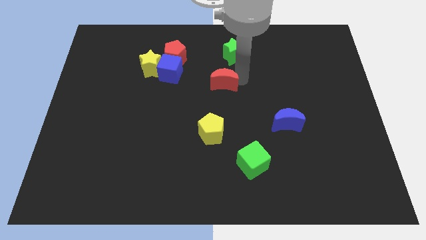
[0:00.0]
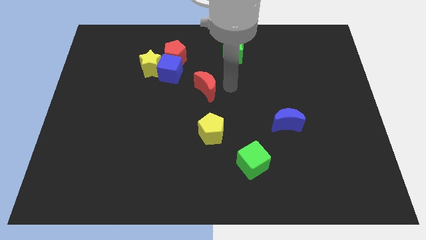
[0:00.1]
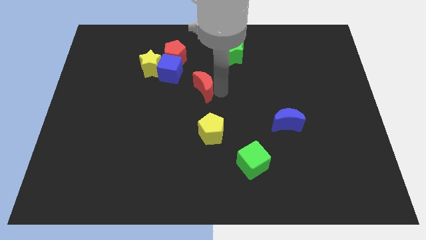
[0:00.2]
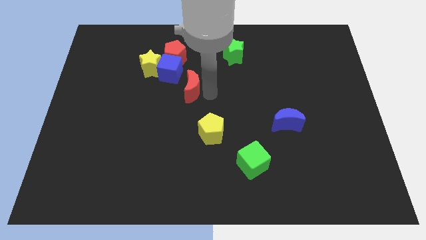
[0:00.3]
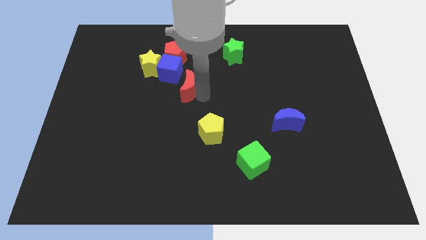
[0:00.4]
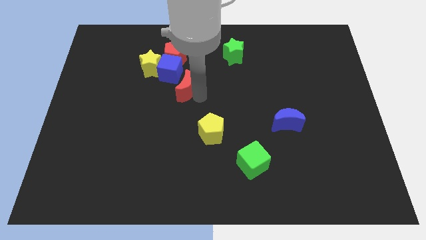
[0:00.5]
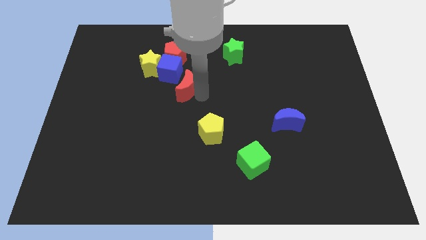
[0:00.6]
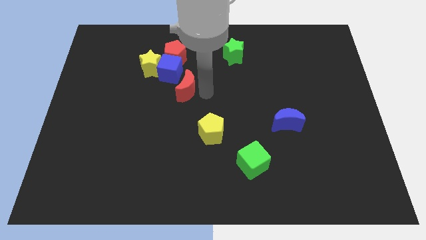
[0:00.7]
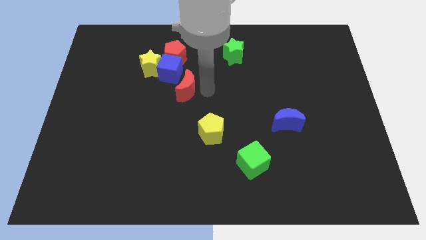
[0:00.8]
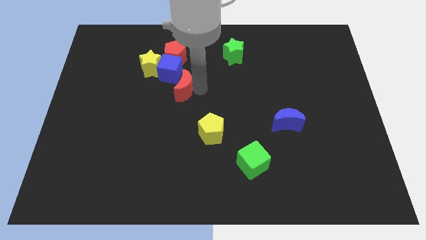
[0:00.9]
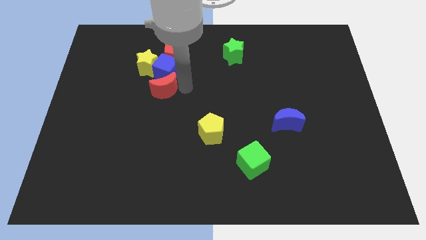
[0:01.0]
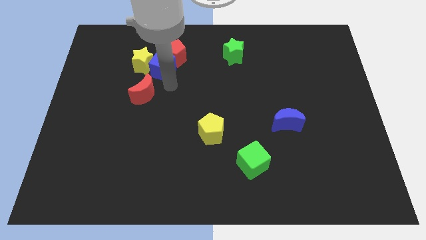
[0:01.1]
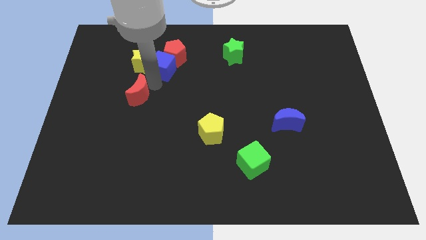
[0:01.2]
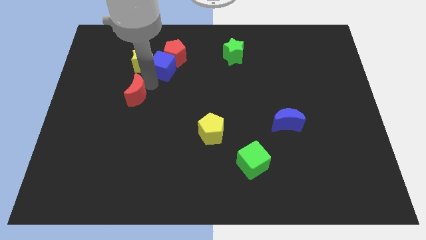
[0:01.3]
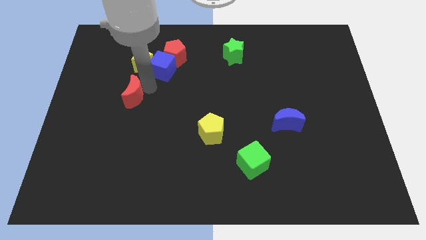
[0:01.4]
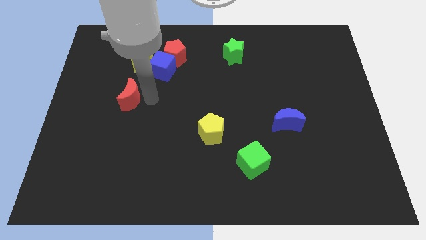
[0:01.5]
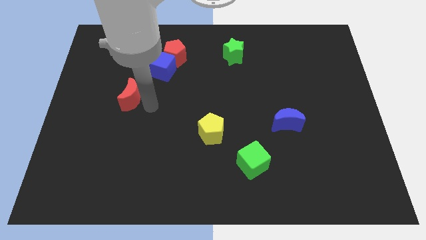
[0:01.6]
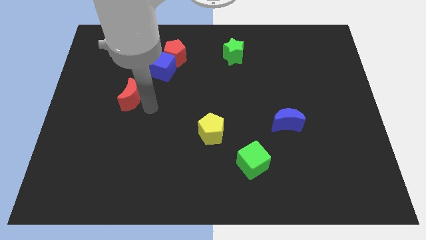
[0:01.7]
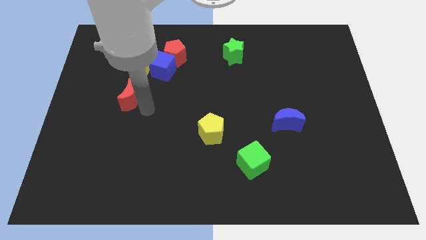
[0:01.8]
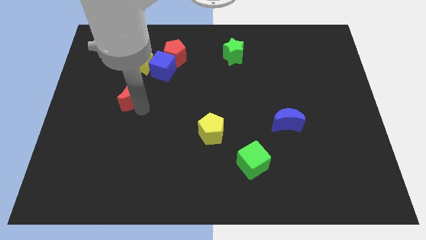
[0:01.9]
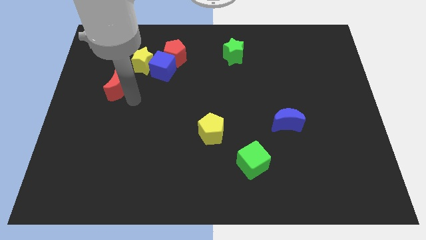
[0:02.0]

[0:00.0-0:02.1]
slide the red crescent behind the yellow star

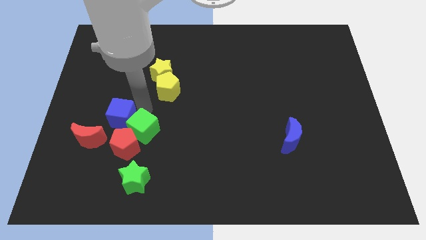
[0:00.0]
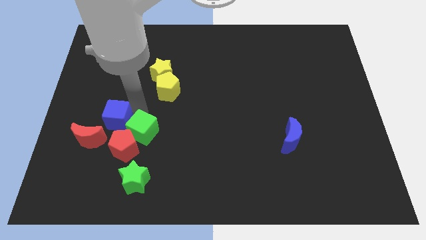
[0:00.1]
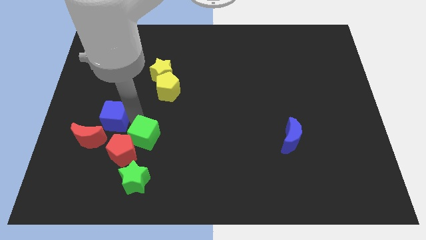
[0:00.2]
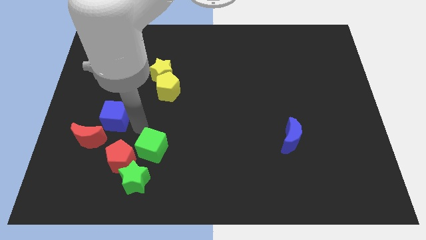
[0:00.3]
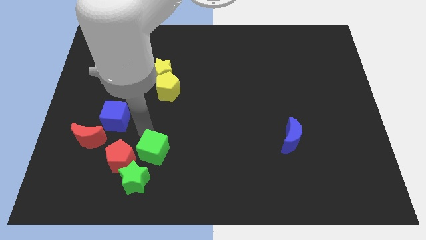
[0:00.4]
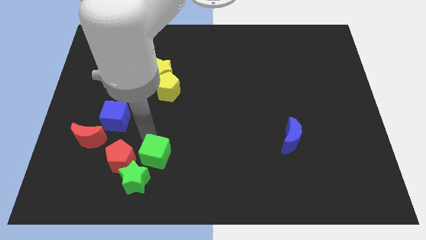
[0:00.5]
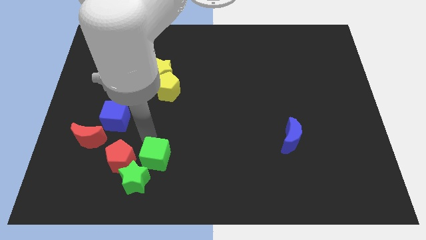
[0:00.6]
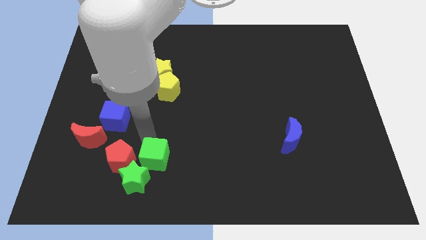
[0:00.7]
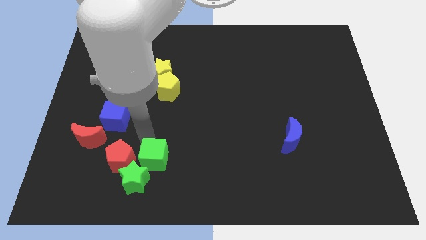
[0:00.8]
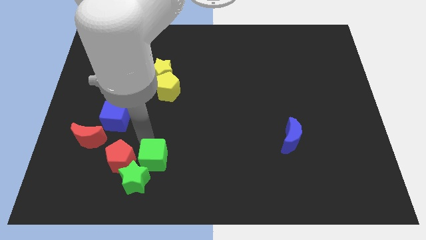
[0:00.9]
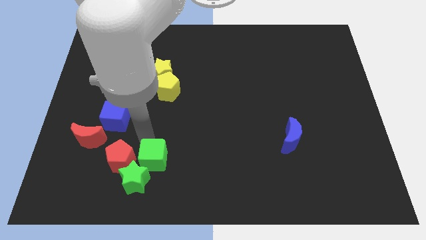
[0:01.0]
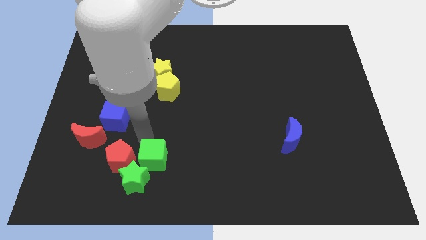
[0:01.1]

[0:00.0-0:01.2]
move green cube close to the green star

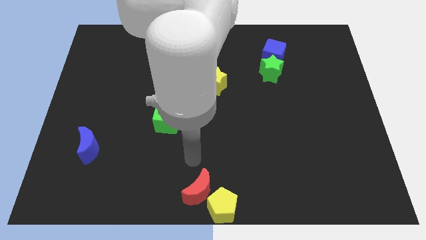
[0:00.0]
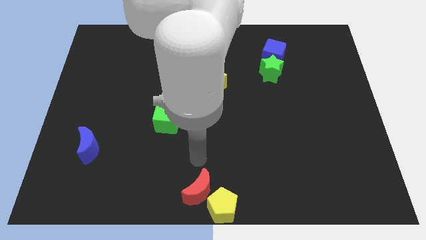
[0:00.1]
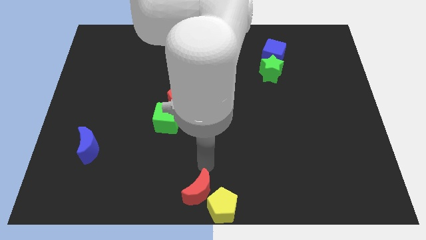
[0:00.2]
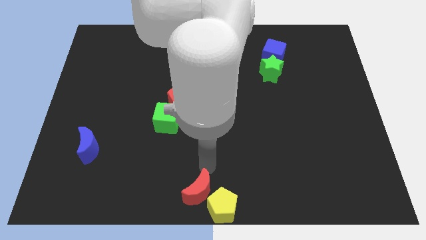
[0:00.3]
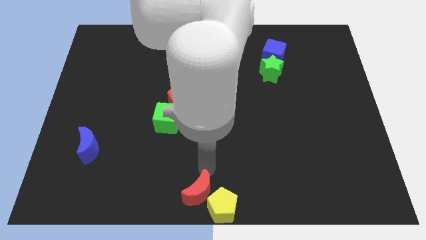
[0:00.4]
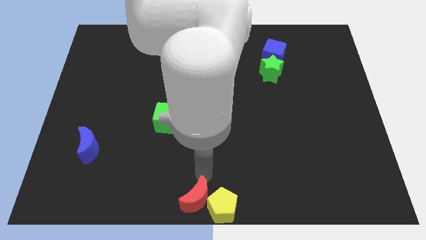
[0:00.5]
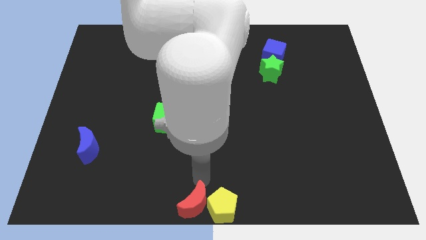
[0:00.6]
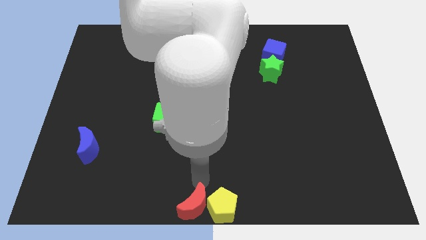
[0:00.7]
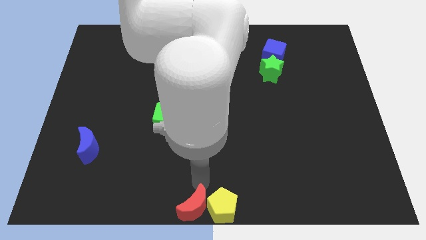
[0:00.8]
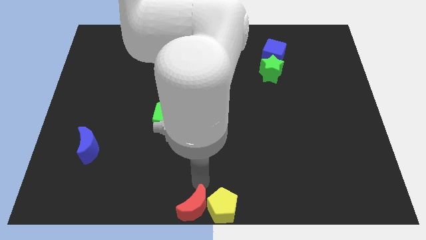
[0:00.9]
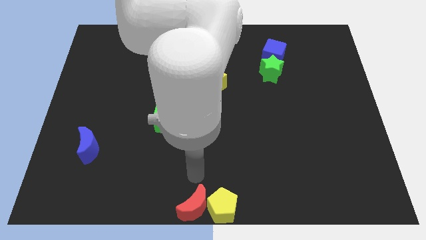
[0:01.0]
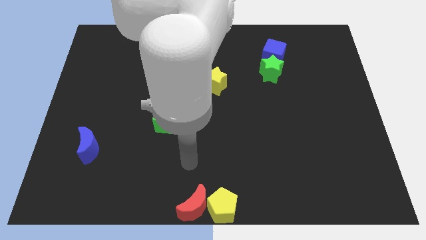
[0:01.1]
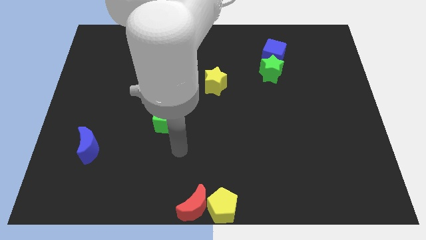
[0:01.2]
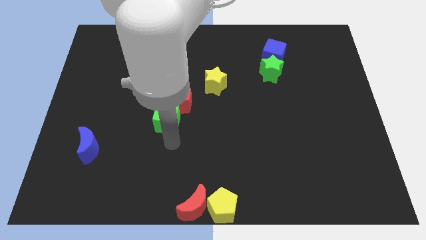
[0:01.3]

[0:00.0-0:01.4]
move the red moon parallel left to the yellow pentagon

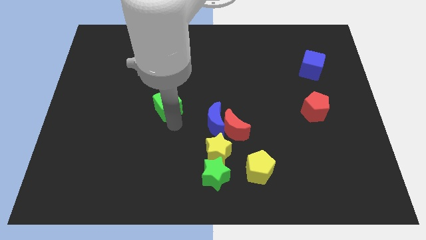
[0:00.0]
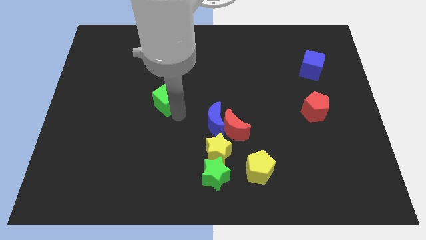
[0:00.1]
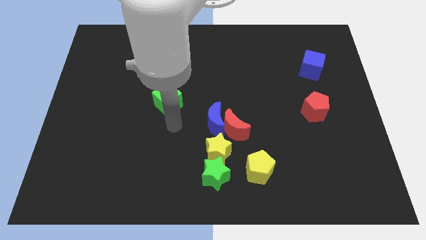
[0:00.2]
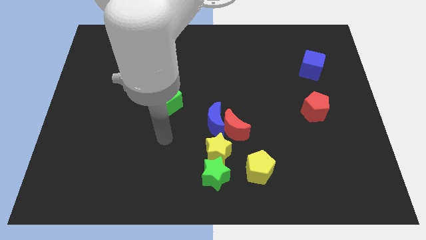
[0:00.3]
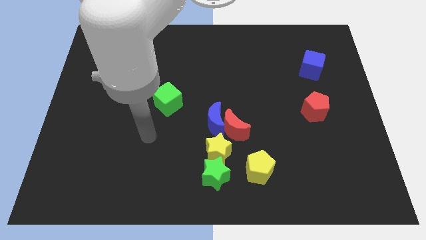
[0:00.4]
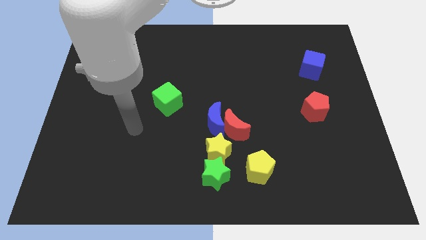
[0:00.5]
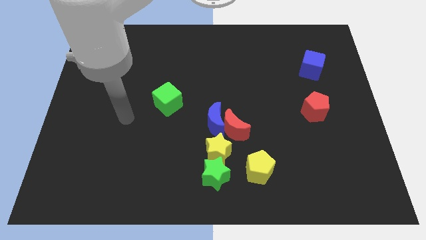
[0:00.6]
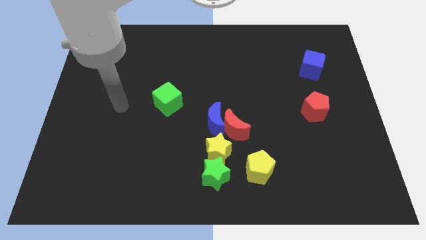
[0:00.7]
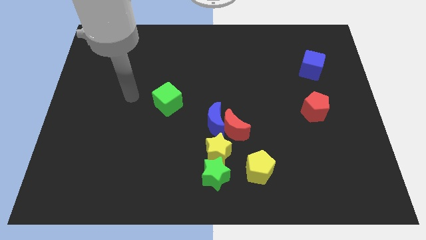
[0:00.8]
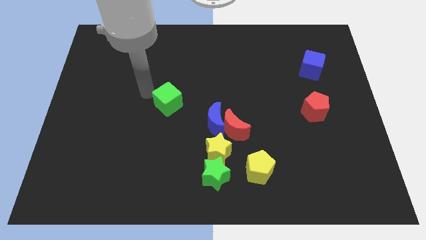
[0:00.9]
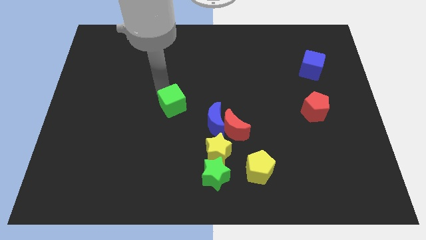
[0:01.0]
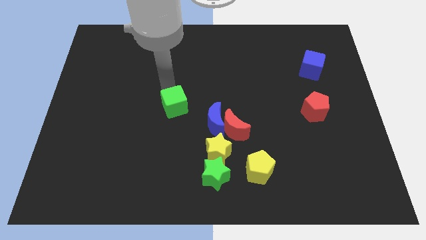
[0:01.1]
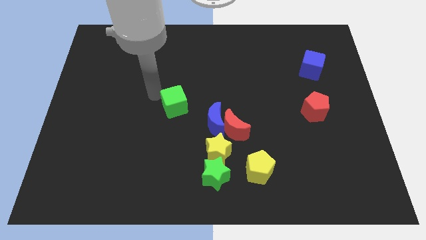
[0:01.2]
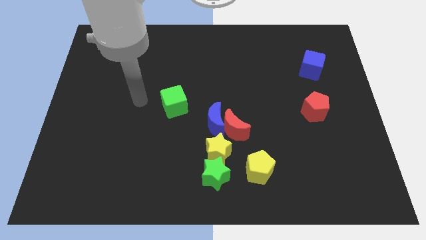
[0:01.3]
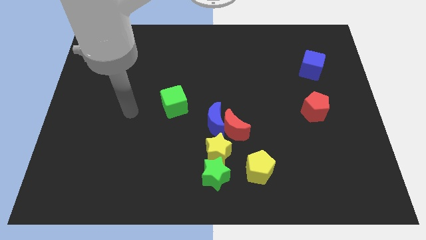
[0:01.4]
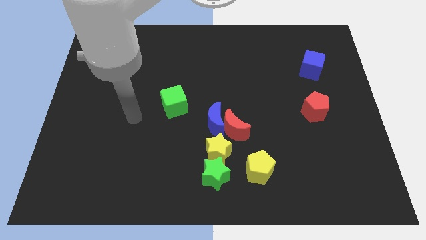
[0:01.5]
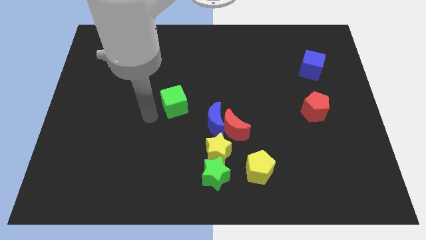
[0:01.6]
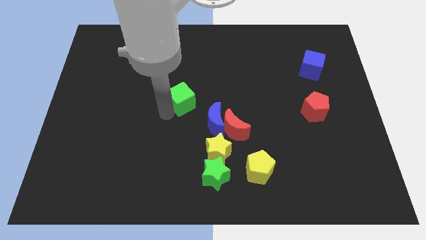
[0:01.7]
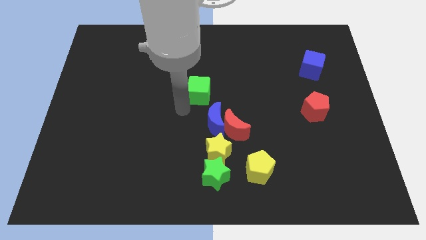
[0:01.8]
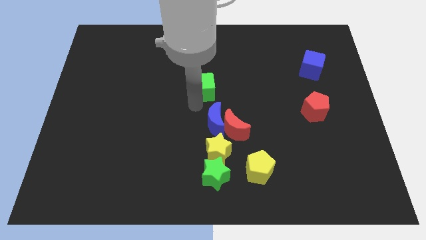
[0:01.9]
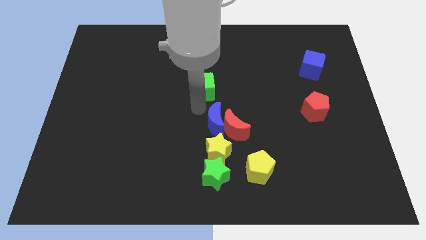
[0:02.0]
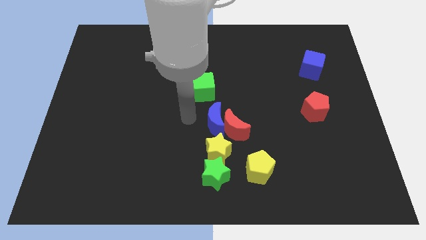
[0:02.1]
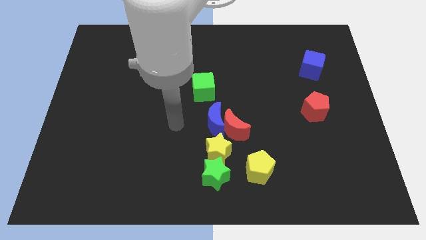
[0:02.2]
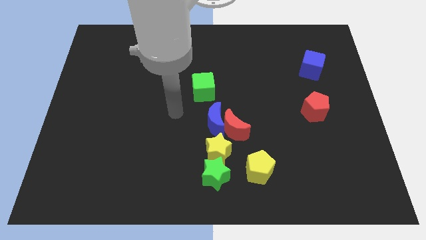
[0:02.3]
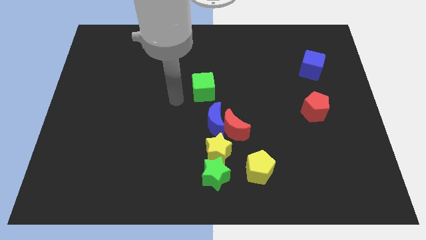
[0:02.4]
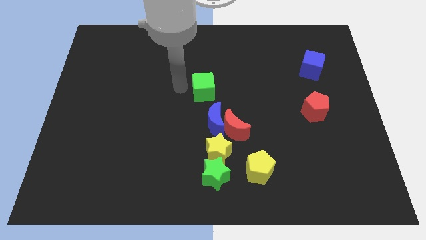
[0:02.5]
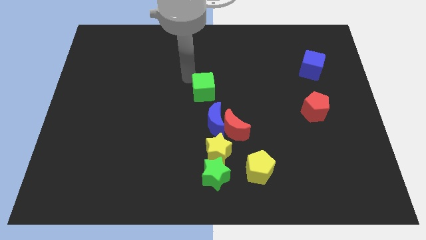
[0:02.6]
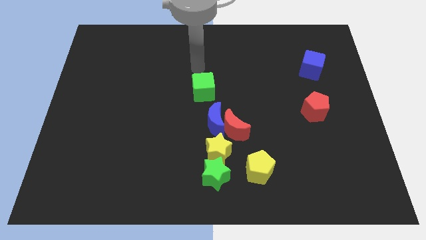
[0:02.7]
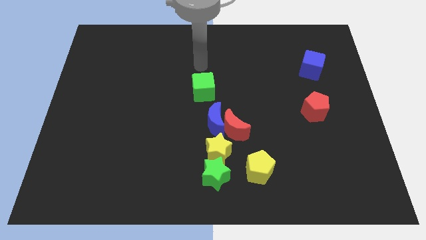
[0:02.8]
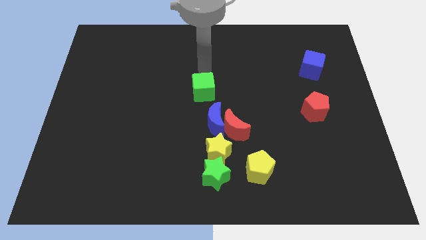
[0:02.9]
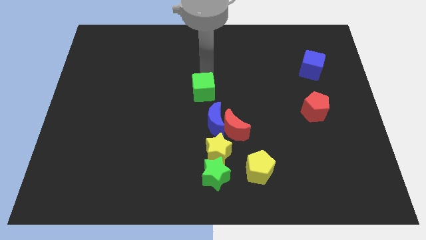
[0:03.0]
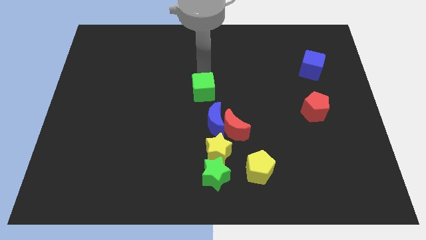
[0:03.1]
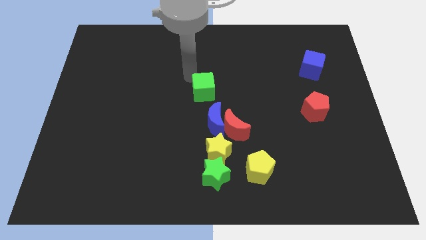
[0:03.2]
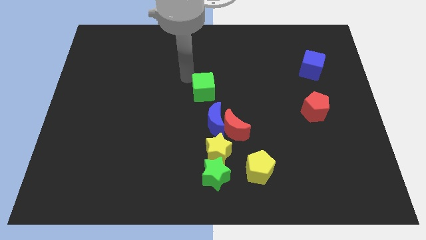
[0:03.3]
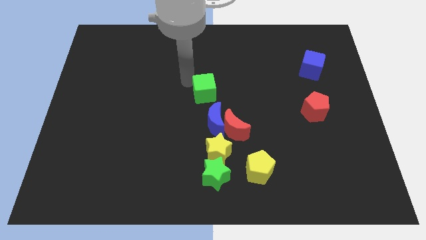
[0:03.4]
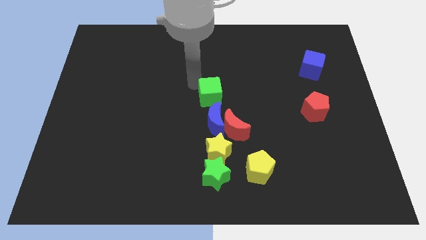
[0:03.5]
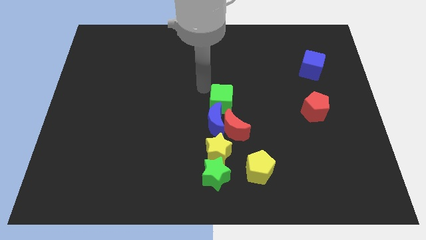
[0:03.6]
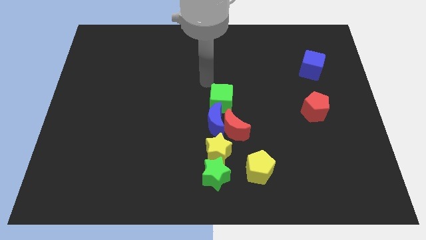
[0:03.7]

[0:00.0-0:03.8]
slide the green cube to the top of the blue crescent

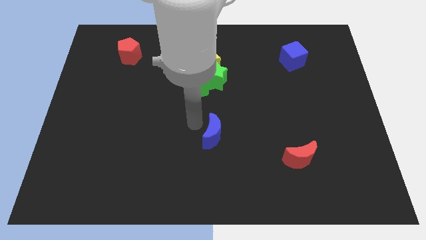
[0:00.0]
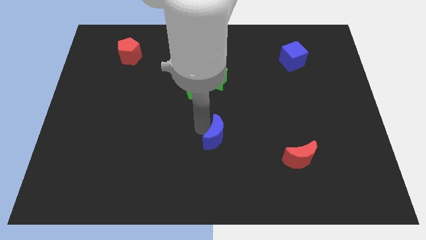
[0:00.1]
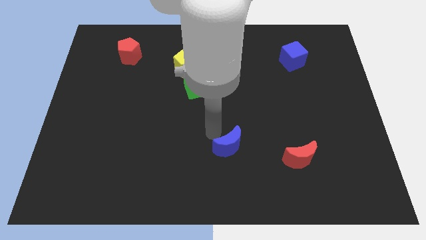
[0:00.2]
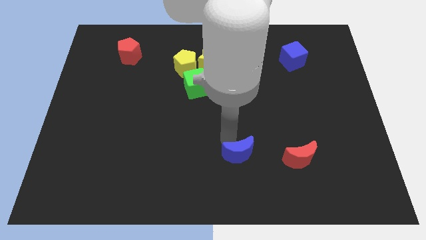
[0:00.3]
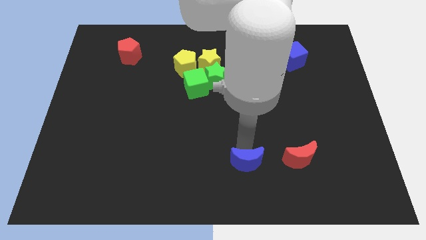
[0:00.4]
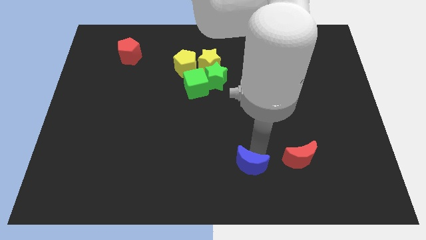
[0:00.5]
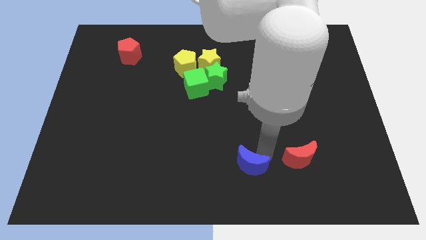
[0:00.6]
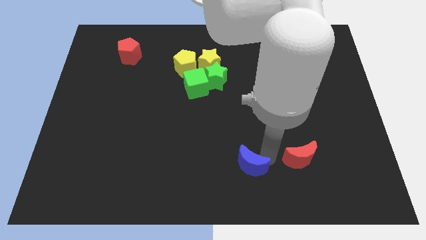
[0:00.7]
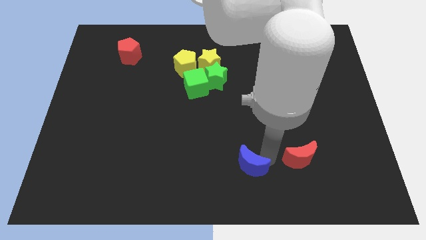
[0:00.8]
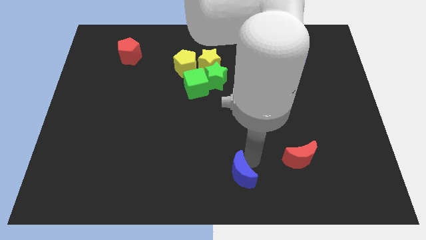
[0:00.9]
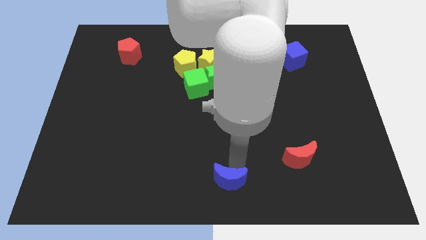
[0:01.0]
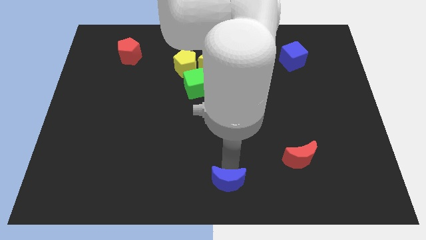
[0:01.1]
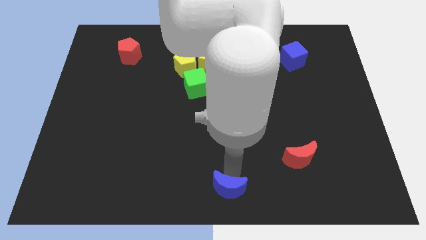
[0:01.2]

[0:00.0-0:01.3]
place blue moon at bottom center
